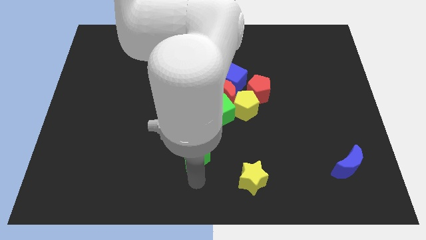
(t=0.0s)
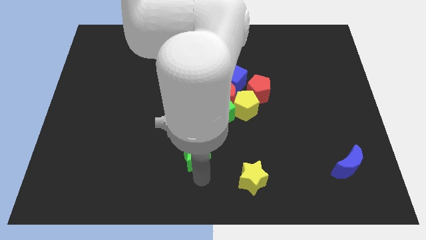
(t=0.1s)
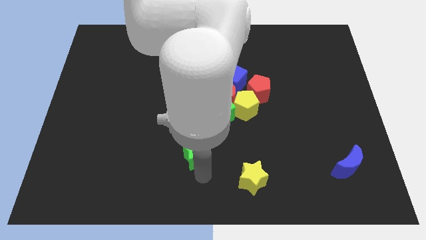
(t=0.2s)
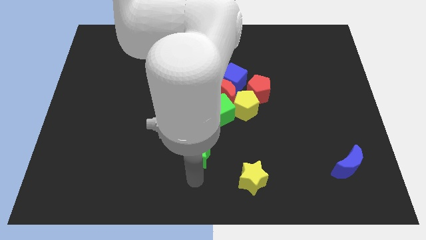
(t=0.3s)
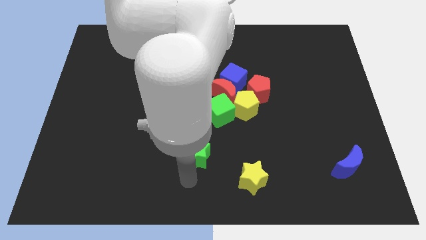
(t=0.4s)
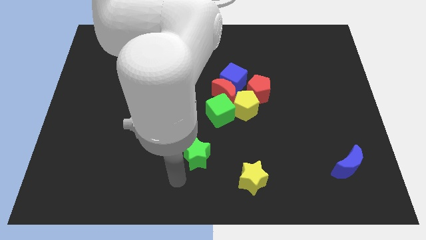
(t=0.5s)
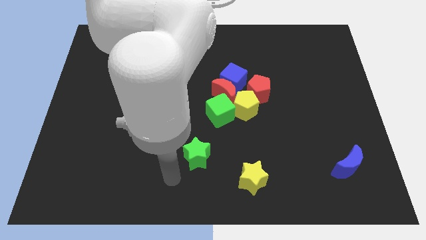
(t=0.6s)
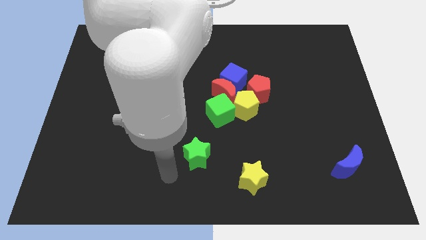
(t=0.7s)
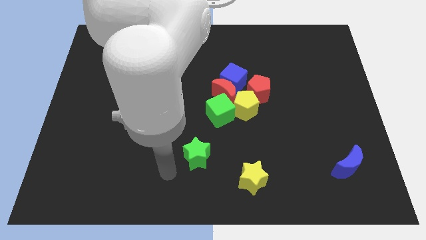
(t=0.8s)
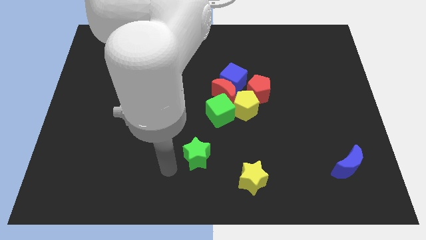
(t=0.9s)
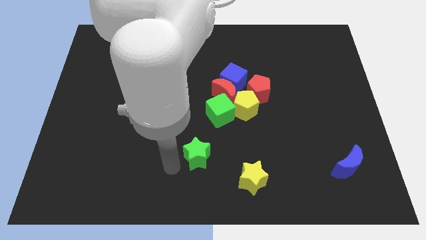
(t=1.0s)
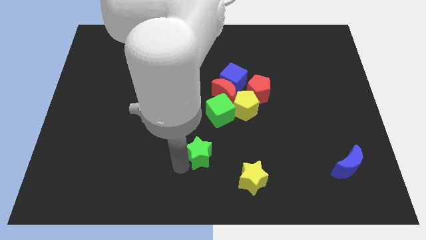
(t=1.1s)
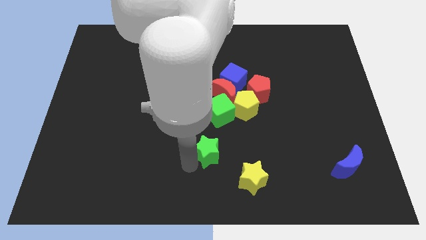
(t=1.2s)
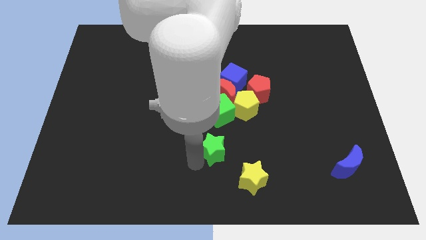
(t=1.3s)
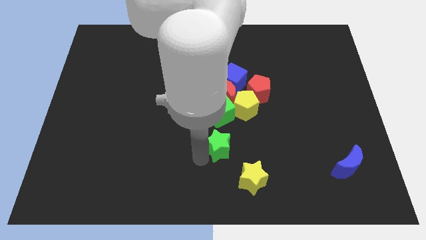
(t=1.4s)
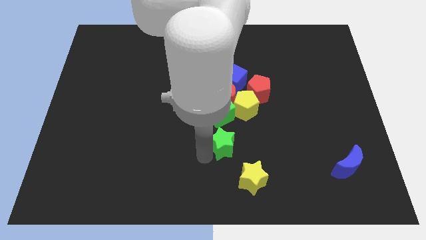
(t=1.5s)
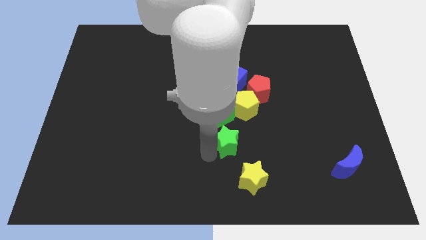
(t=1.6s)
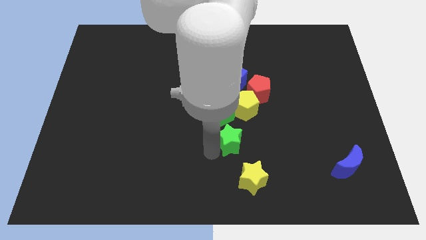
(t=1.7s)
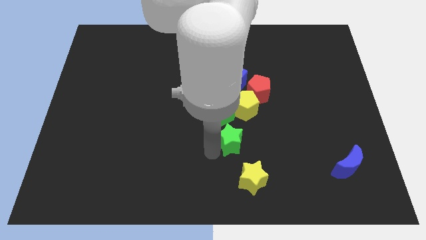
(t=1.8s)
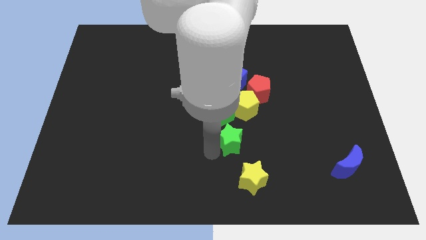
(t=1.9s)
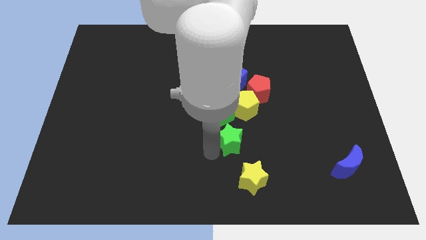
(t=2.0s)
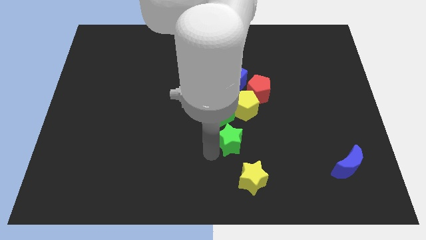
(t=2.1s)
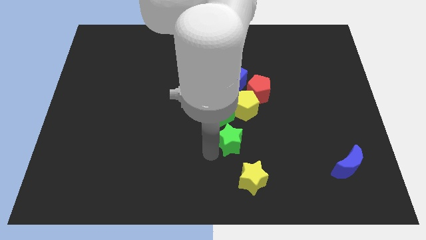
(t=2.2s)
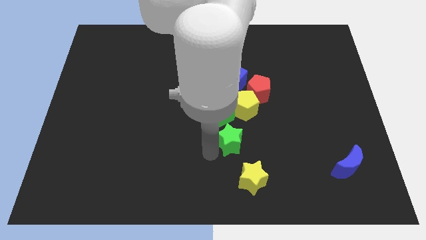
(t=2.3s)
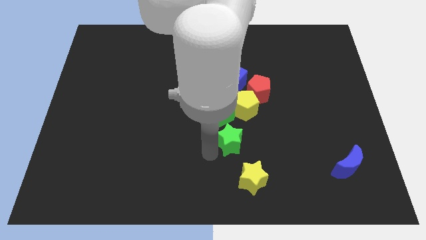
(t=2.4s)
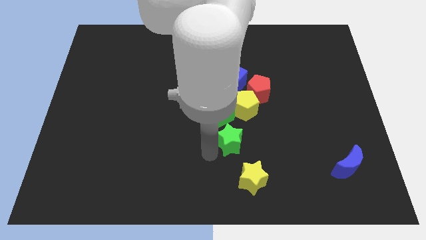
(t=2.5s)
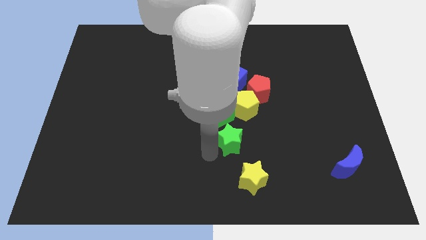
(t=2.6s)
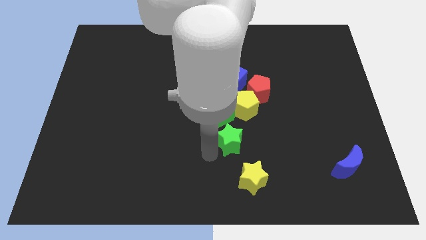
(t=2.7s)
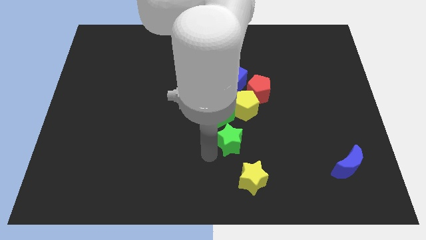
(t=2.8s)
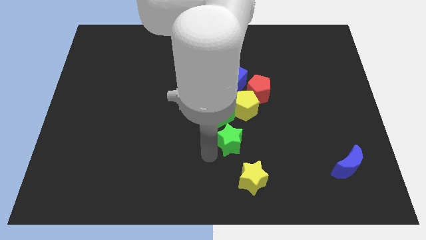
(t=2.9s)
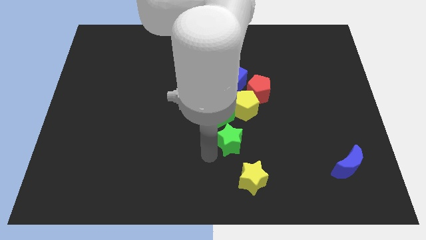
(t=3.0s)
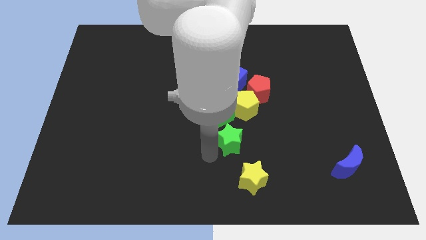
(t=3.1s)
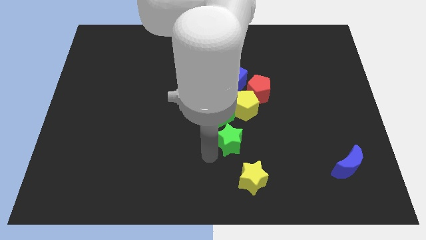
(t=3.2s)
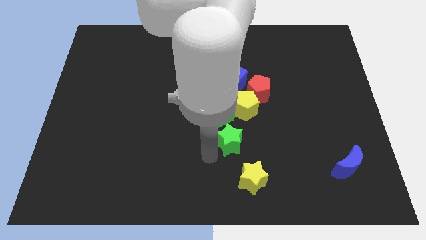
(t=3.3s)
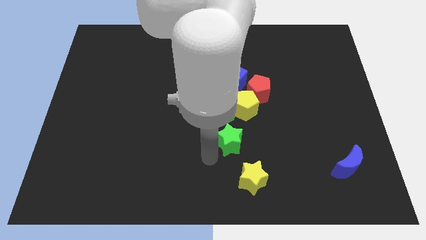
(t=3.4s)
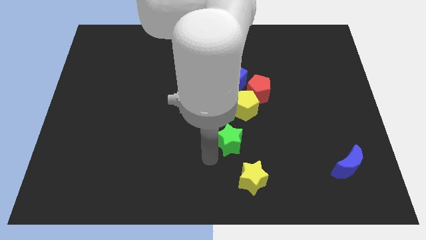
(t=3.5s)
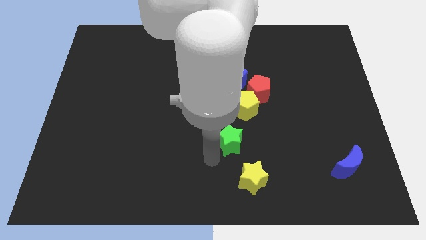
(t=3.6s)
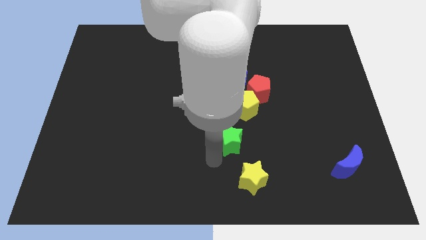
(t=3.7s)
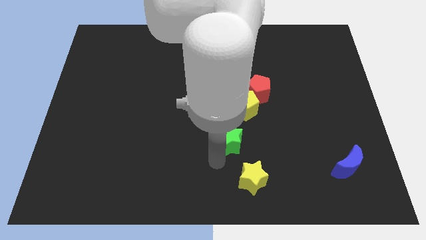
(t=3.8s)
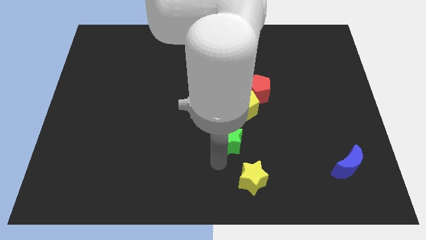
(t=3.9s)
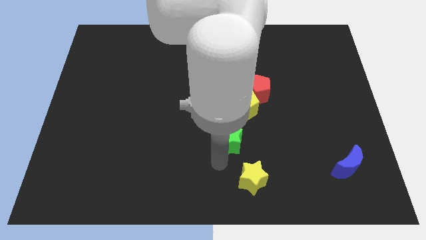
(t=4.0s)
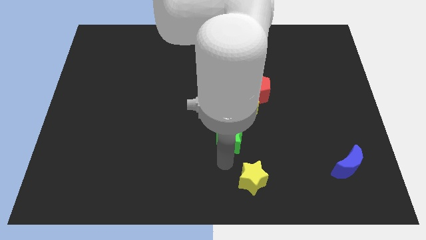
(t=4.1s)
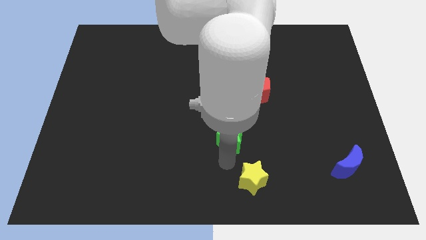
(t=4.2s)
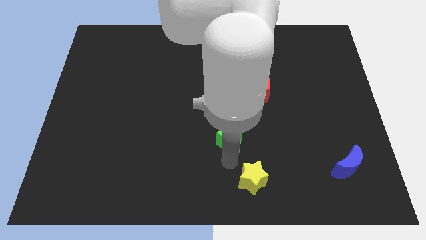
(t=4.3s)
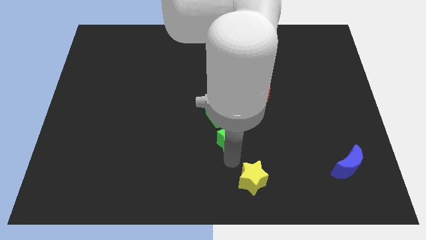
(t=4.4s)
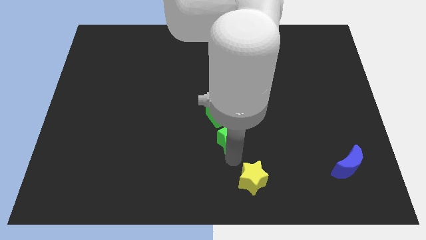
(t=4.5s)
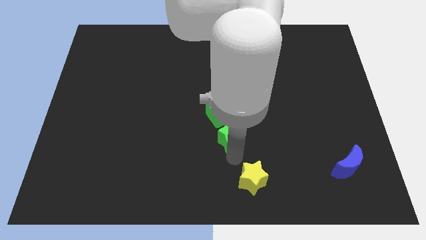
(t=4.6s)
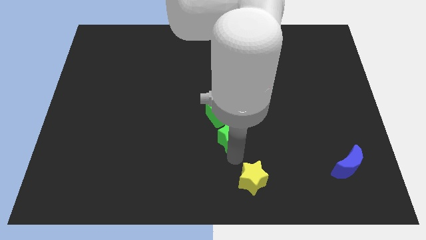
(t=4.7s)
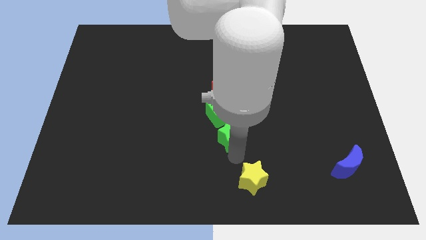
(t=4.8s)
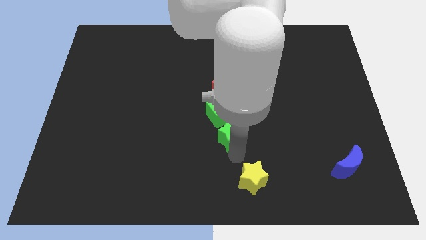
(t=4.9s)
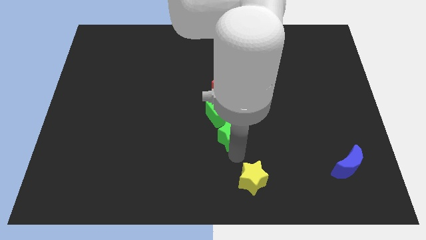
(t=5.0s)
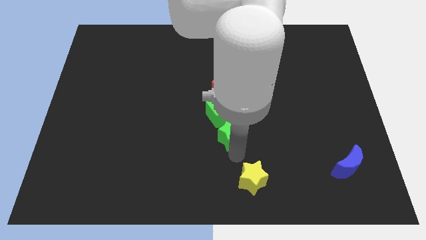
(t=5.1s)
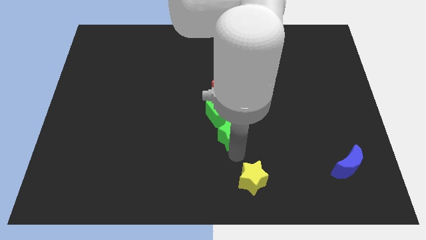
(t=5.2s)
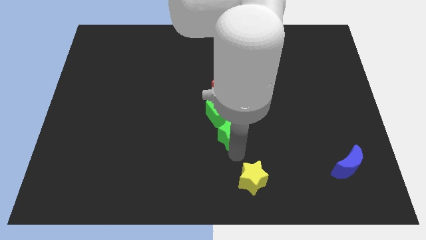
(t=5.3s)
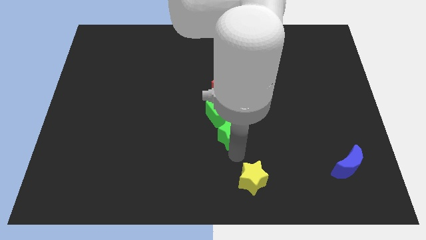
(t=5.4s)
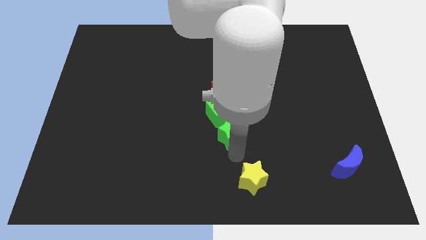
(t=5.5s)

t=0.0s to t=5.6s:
push the green star towards bottom of the green cube

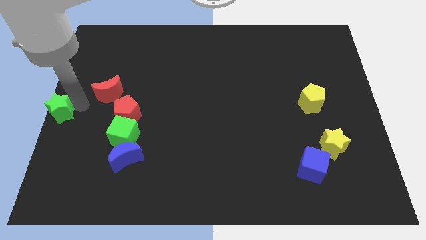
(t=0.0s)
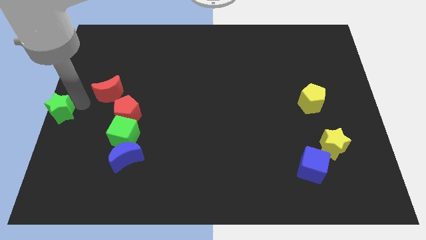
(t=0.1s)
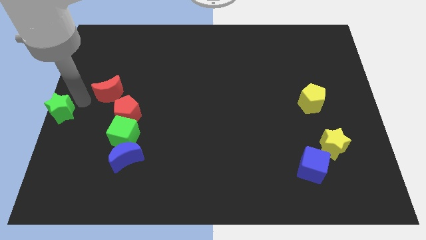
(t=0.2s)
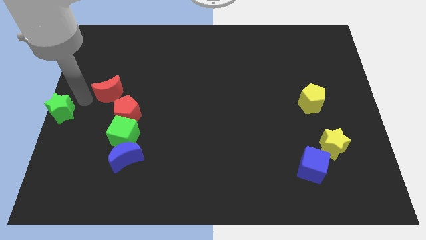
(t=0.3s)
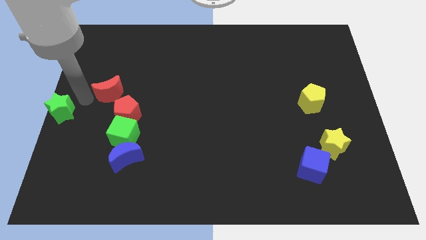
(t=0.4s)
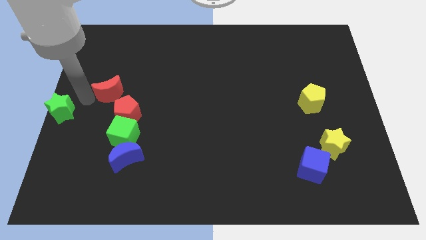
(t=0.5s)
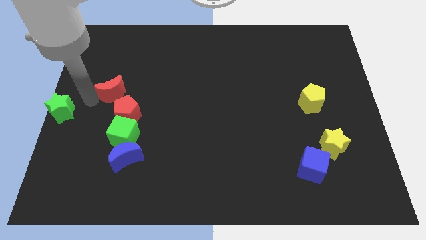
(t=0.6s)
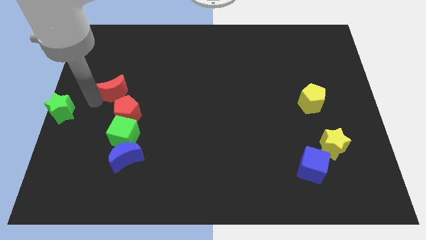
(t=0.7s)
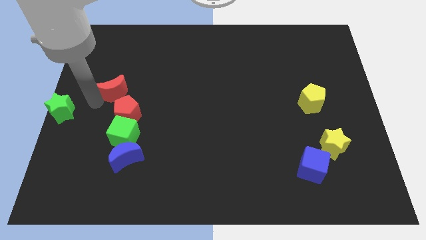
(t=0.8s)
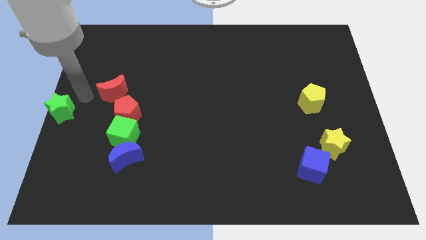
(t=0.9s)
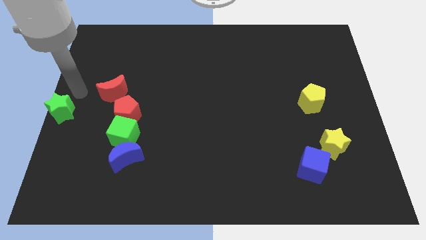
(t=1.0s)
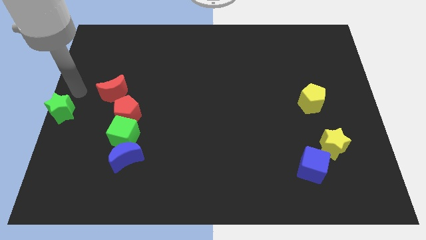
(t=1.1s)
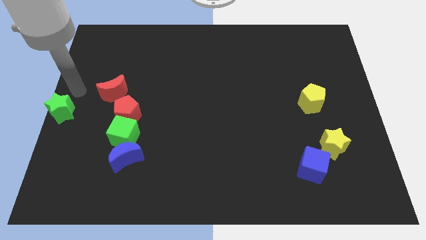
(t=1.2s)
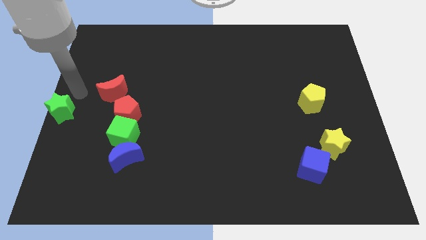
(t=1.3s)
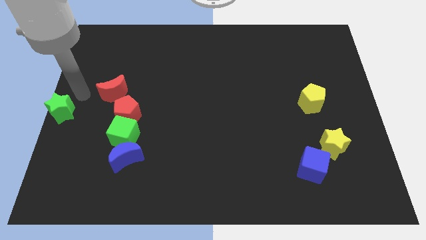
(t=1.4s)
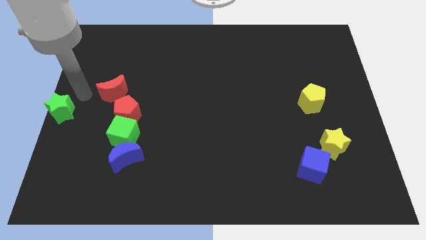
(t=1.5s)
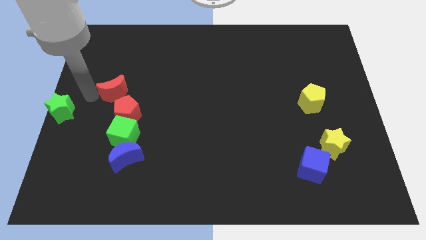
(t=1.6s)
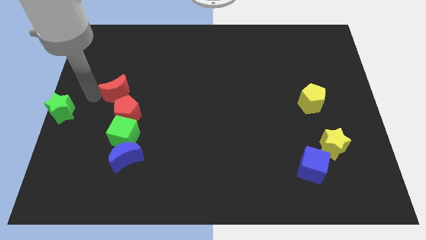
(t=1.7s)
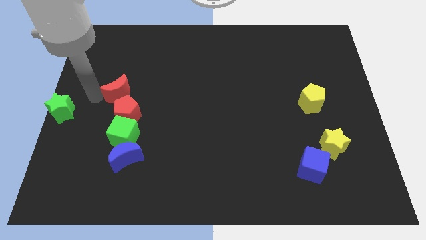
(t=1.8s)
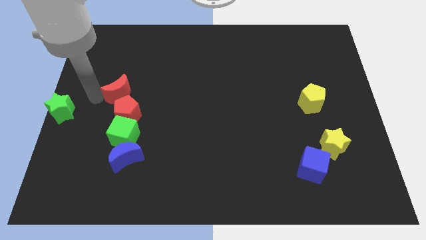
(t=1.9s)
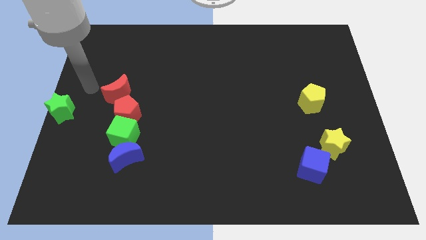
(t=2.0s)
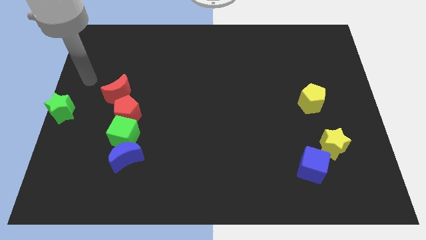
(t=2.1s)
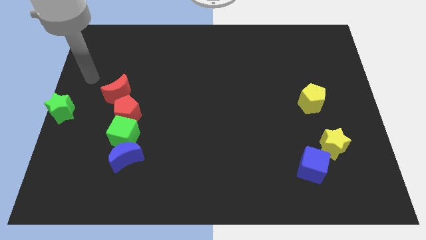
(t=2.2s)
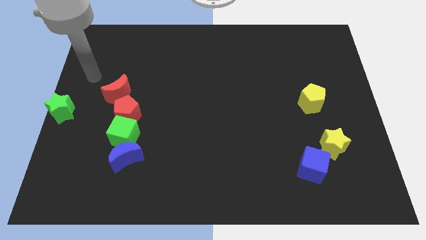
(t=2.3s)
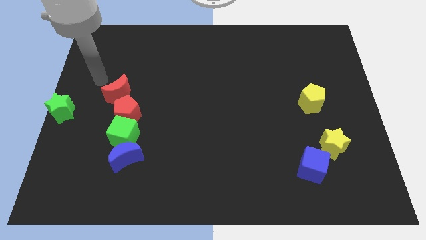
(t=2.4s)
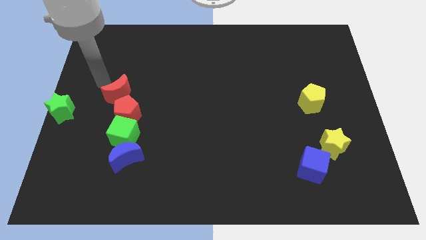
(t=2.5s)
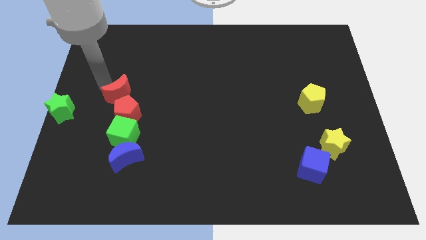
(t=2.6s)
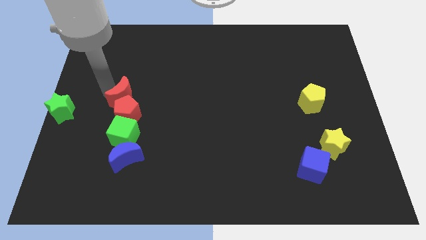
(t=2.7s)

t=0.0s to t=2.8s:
push the red moon into the red pentagon

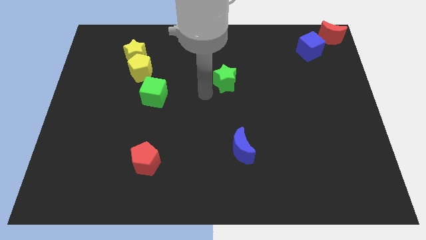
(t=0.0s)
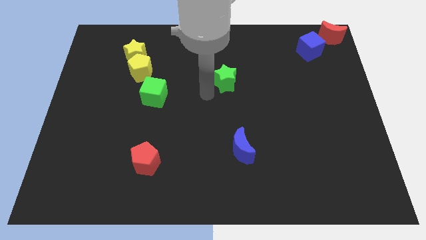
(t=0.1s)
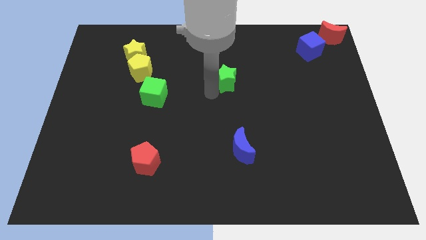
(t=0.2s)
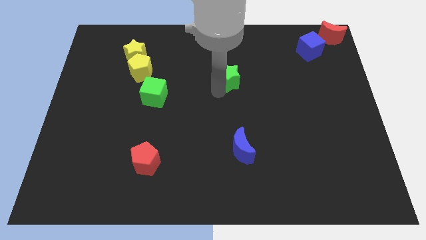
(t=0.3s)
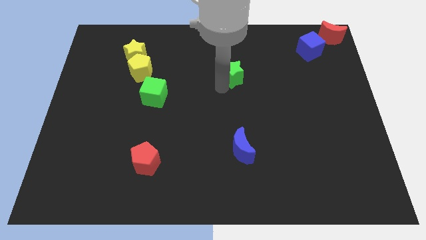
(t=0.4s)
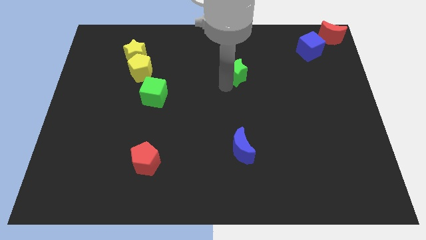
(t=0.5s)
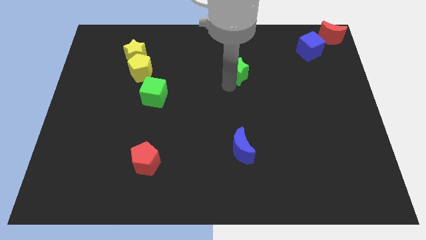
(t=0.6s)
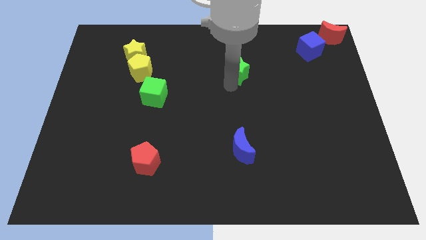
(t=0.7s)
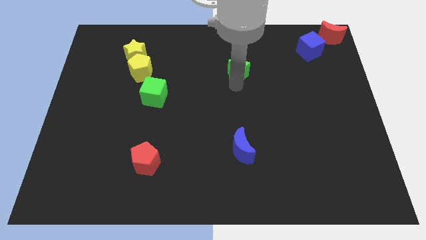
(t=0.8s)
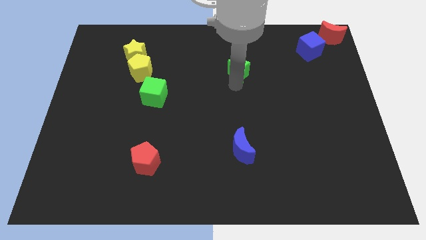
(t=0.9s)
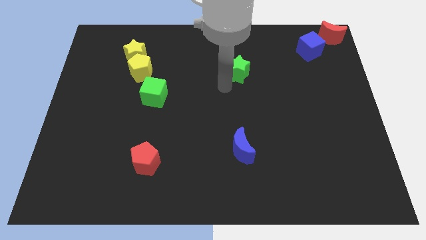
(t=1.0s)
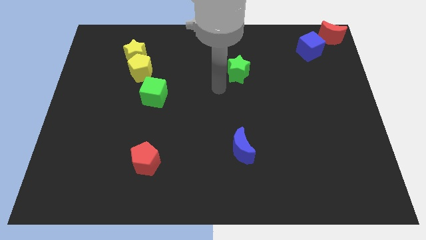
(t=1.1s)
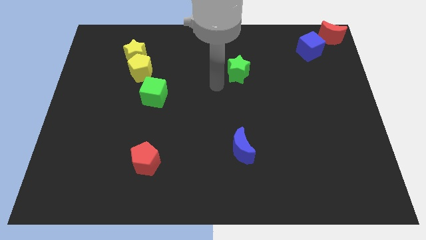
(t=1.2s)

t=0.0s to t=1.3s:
push the green star towards the top left of the board
